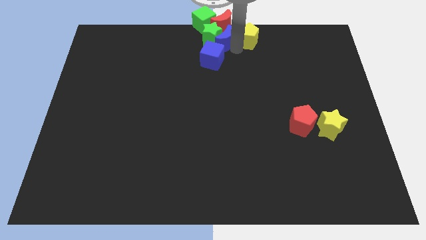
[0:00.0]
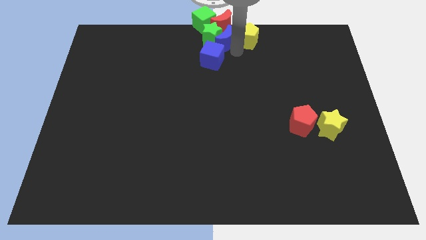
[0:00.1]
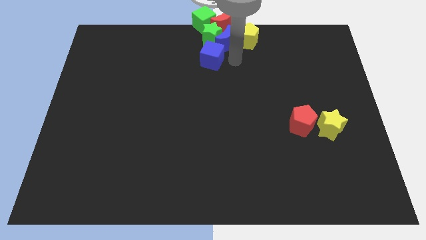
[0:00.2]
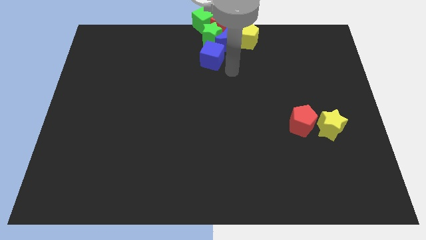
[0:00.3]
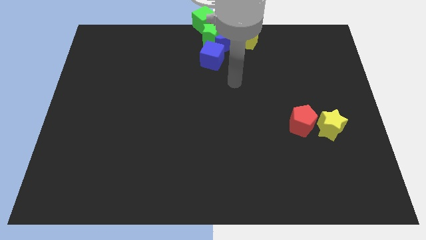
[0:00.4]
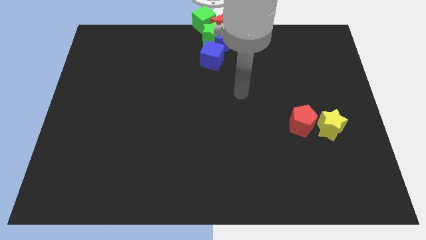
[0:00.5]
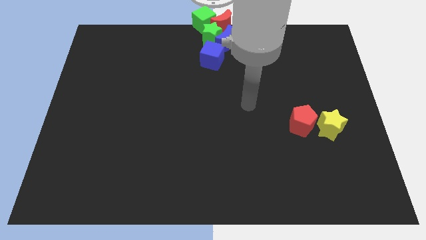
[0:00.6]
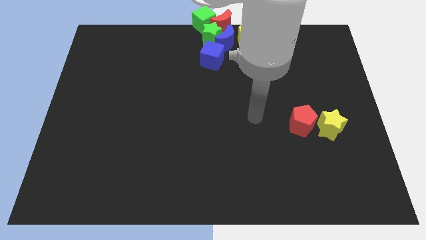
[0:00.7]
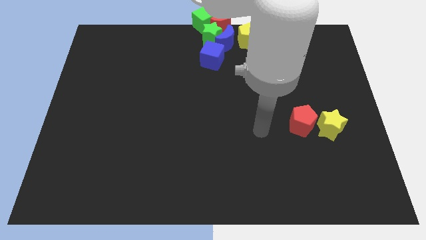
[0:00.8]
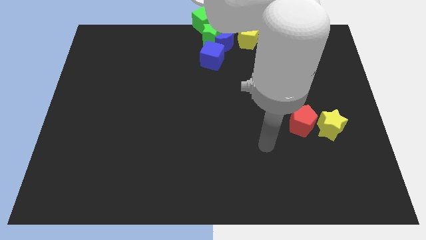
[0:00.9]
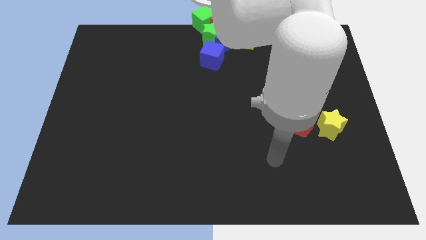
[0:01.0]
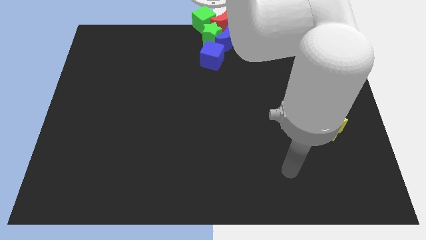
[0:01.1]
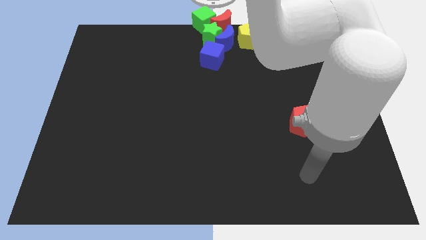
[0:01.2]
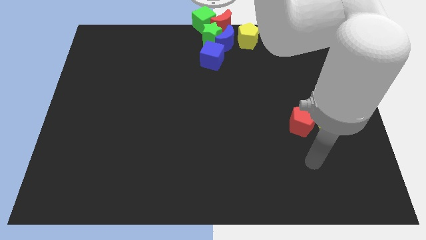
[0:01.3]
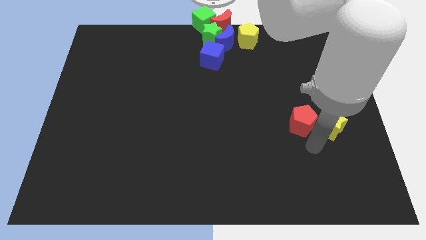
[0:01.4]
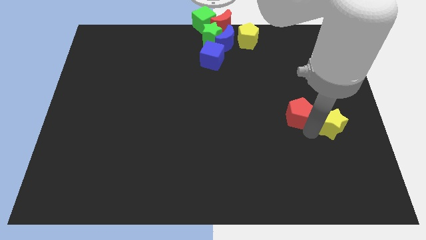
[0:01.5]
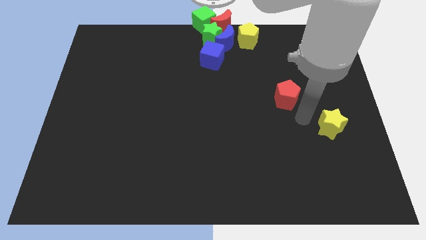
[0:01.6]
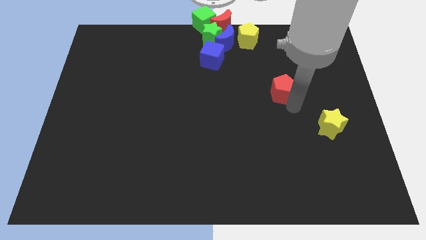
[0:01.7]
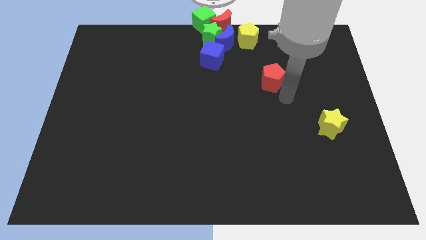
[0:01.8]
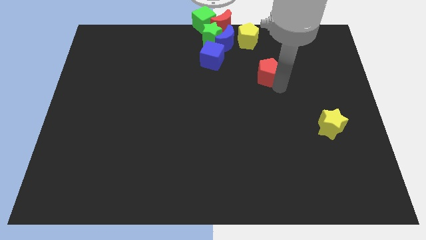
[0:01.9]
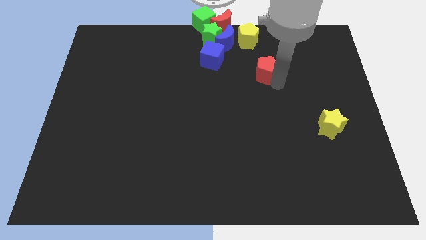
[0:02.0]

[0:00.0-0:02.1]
move the red pentagon towards the yellow pentagon

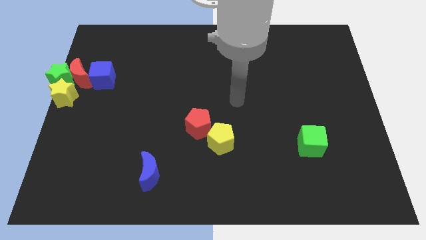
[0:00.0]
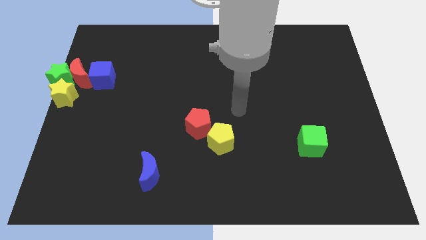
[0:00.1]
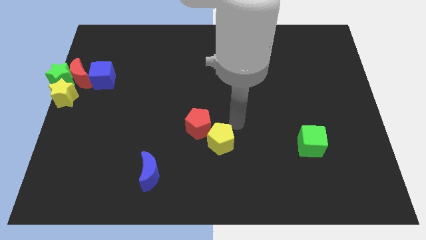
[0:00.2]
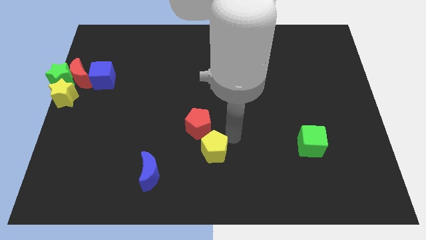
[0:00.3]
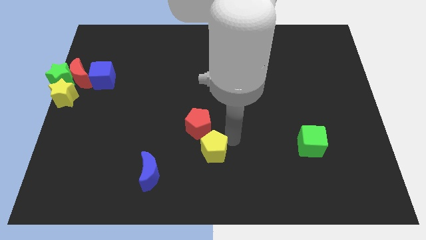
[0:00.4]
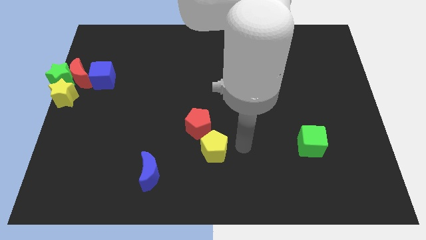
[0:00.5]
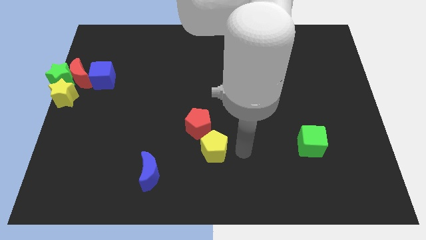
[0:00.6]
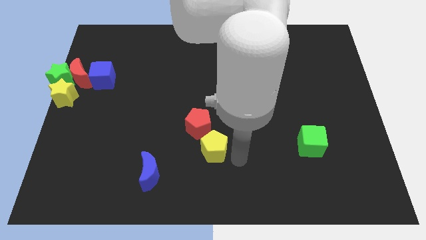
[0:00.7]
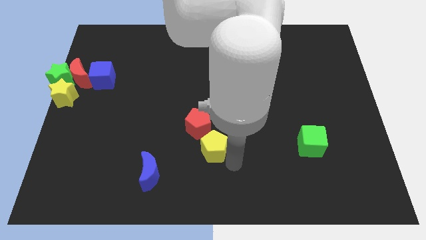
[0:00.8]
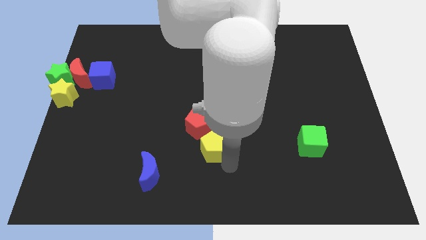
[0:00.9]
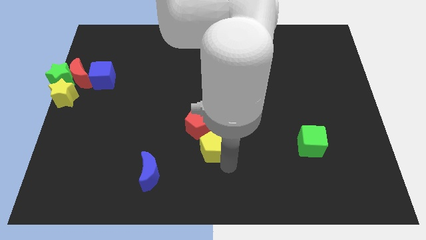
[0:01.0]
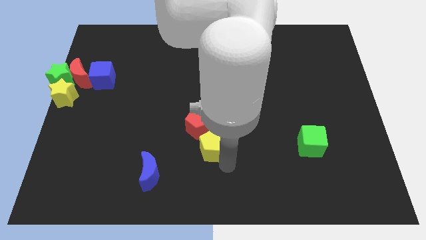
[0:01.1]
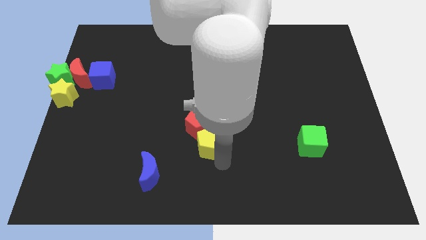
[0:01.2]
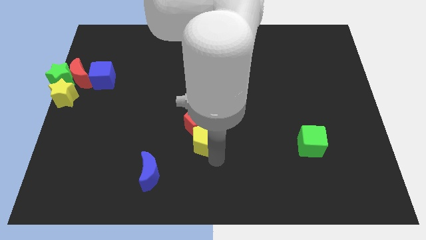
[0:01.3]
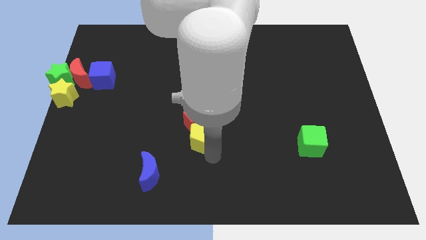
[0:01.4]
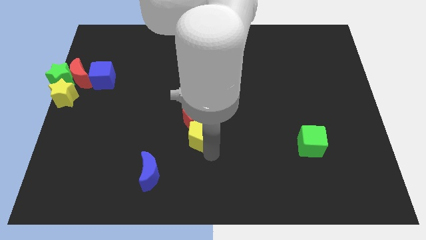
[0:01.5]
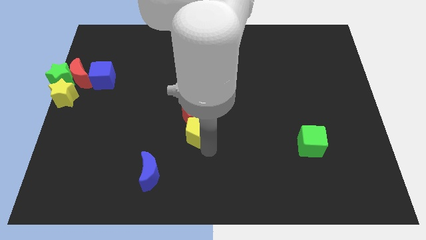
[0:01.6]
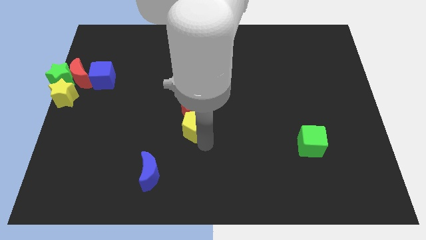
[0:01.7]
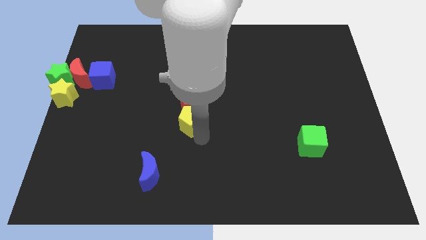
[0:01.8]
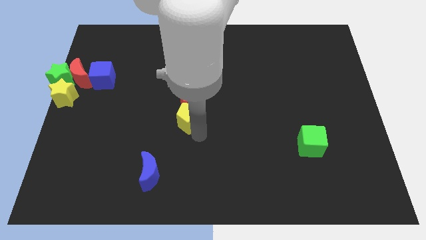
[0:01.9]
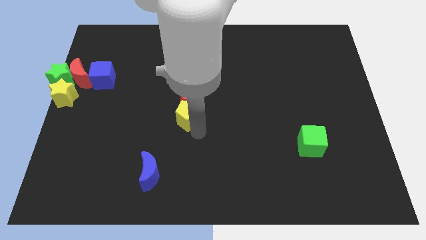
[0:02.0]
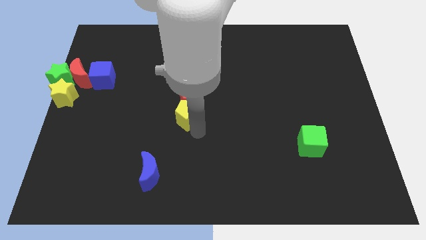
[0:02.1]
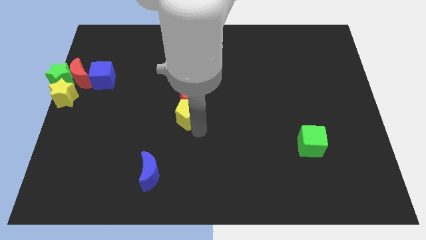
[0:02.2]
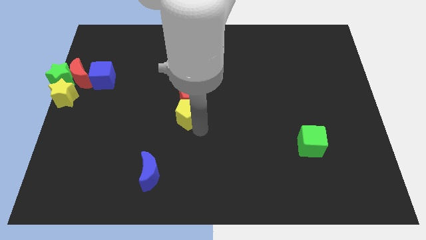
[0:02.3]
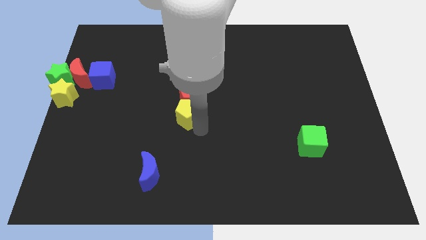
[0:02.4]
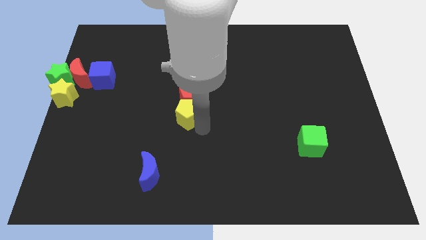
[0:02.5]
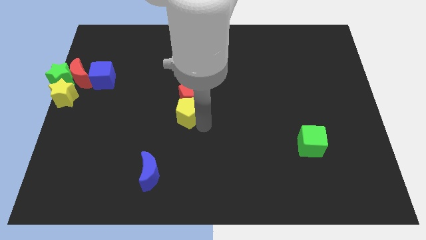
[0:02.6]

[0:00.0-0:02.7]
push the yellow and red pentagons towards the top

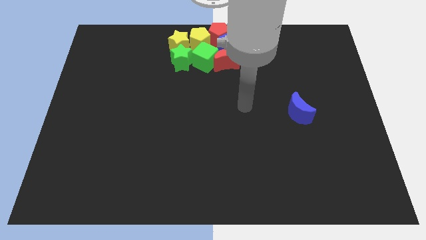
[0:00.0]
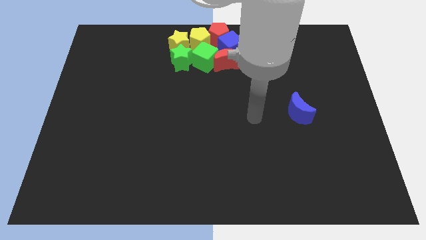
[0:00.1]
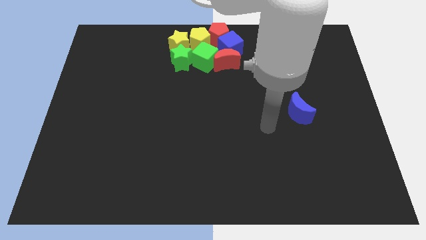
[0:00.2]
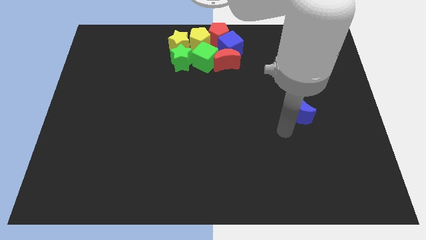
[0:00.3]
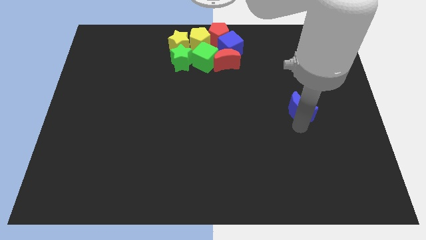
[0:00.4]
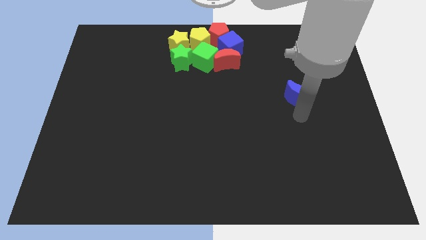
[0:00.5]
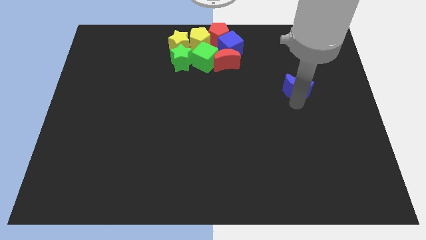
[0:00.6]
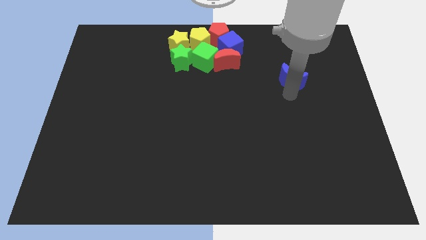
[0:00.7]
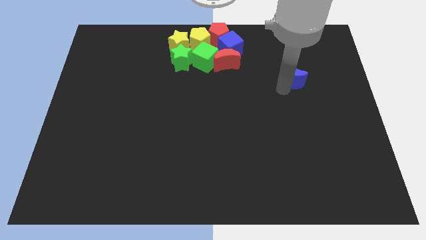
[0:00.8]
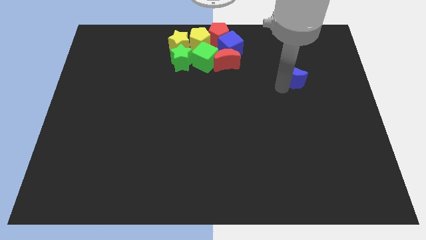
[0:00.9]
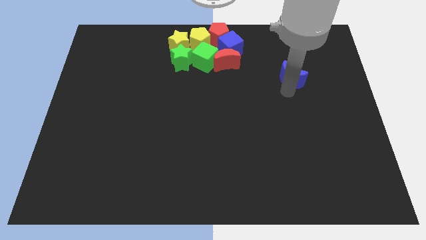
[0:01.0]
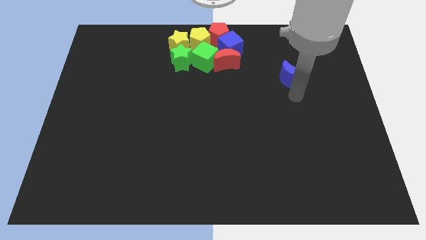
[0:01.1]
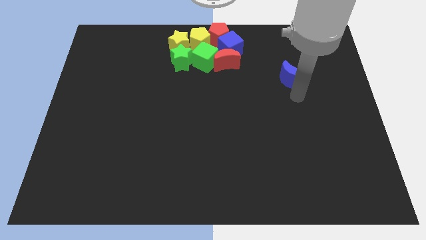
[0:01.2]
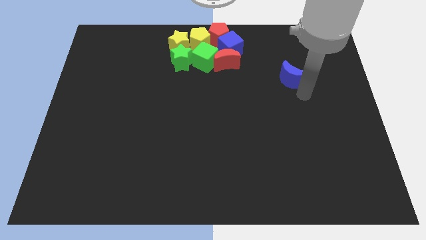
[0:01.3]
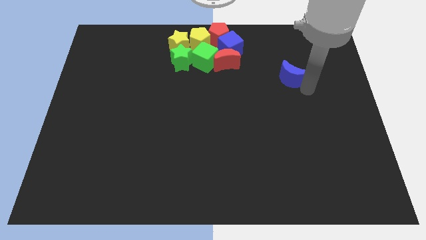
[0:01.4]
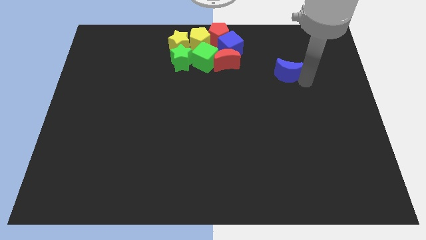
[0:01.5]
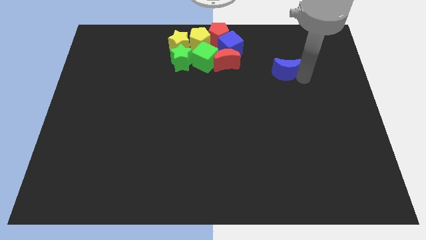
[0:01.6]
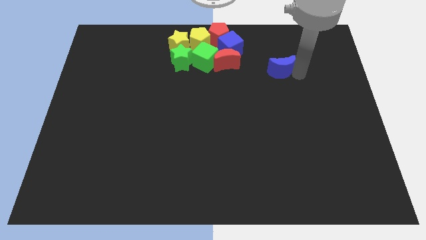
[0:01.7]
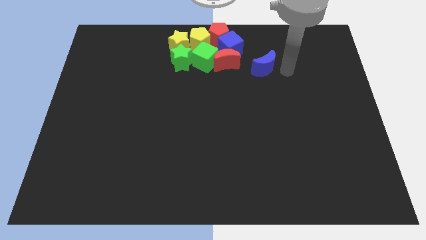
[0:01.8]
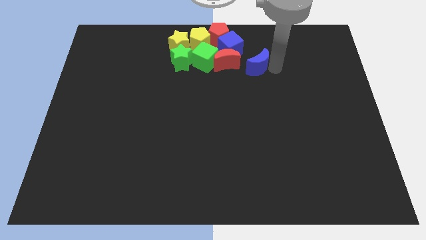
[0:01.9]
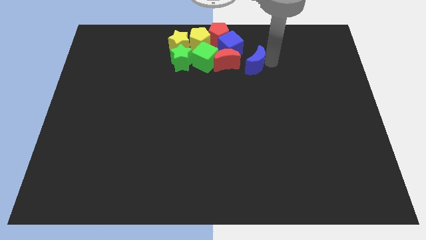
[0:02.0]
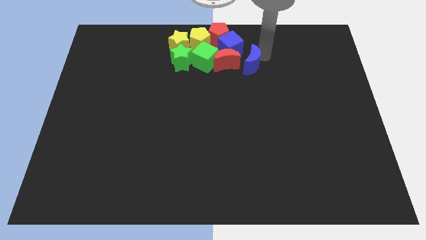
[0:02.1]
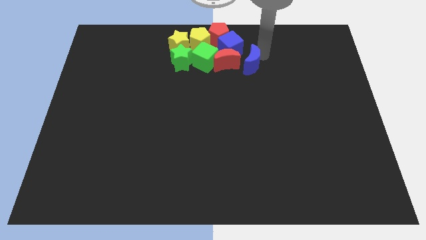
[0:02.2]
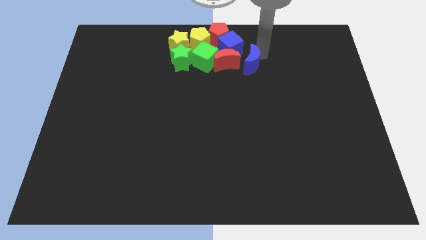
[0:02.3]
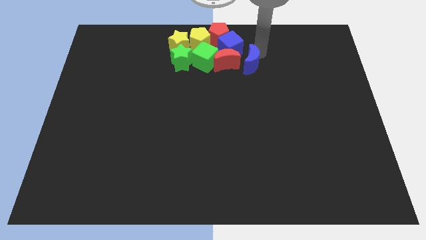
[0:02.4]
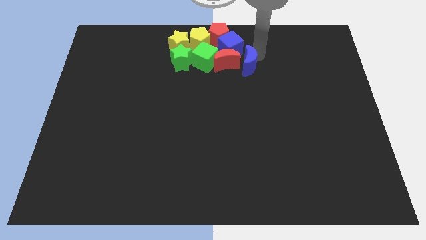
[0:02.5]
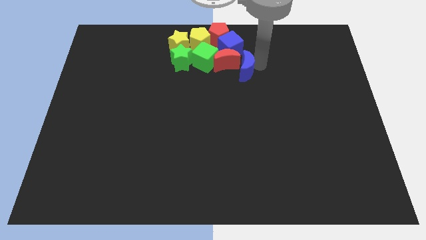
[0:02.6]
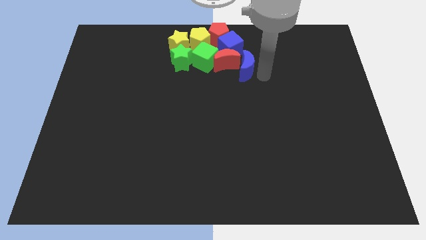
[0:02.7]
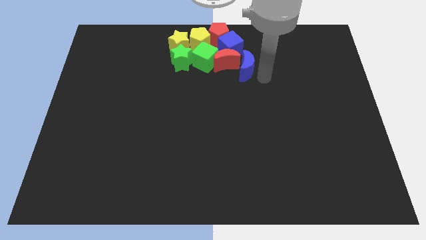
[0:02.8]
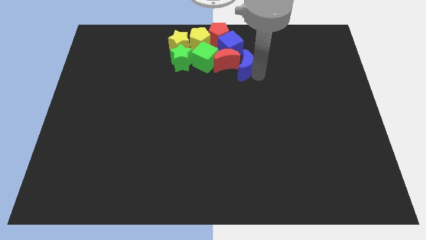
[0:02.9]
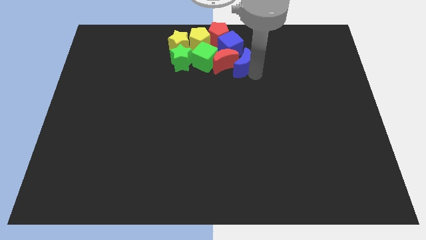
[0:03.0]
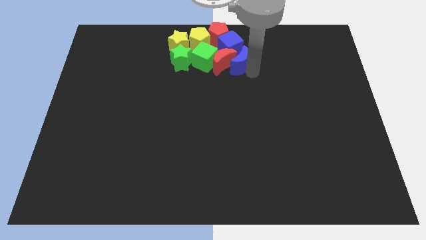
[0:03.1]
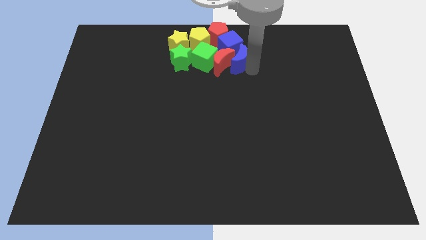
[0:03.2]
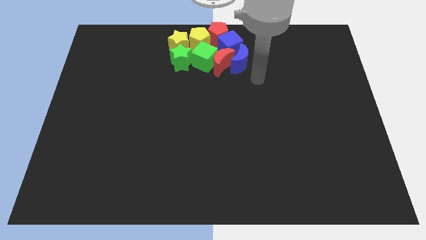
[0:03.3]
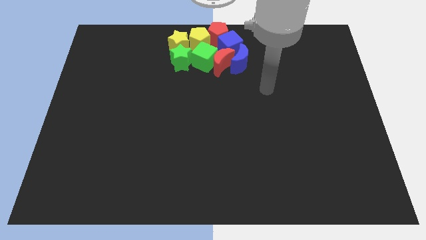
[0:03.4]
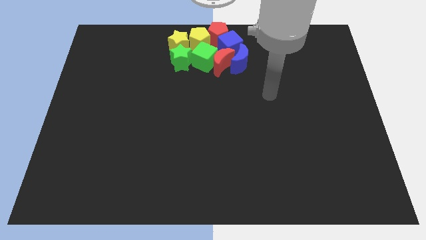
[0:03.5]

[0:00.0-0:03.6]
move the blue crescent into the group of blocks

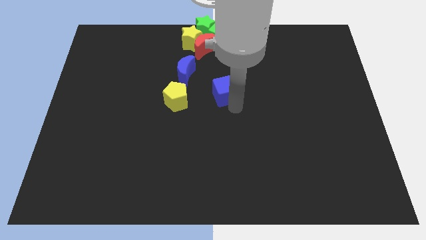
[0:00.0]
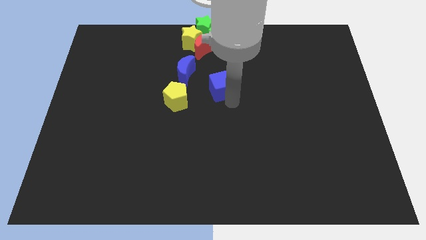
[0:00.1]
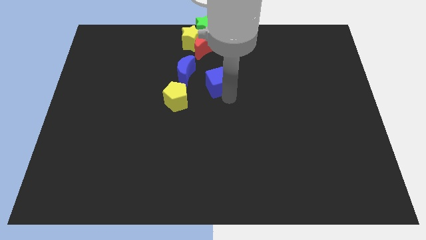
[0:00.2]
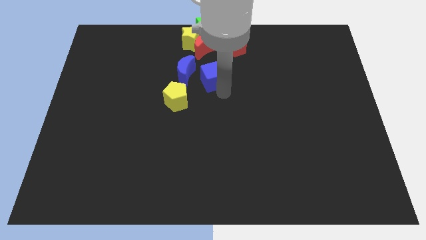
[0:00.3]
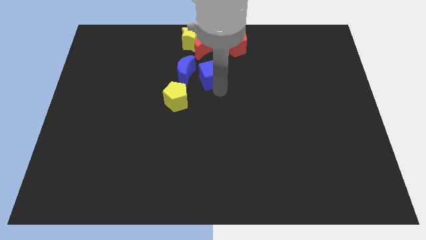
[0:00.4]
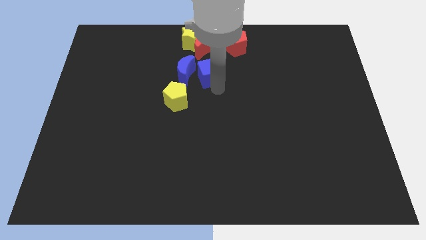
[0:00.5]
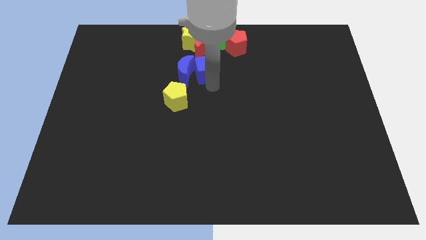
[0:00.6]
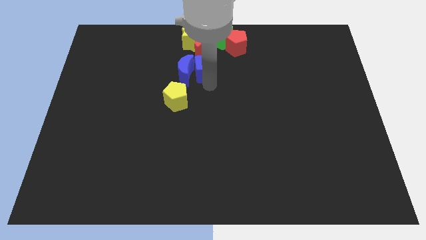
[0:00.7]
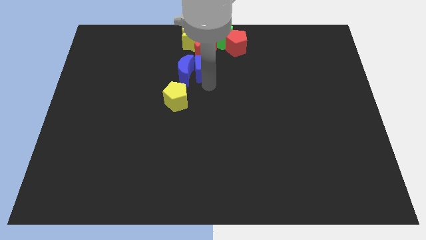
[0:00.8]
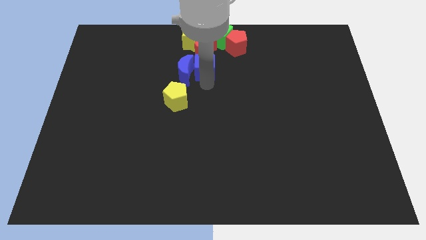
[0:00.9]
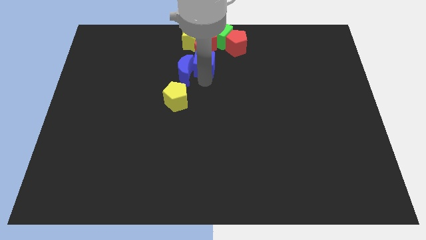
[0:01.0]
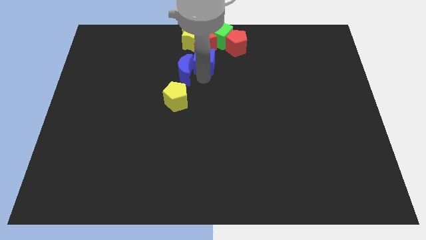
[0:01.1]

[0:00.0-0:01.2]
place blue cube right to blue moon
